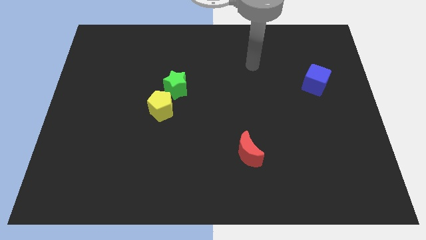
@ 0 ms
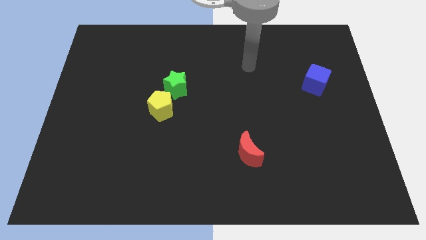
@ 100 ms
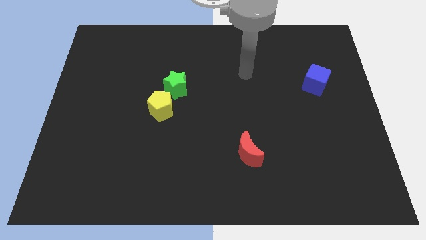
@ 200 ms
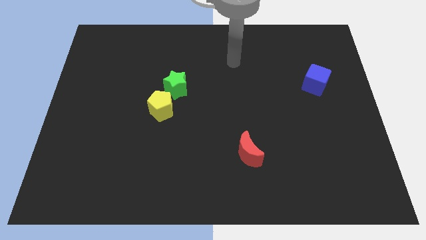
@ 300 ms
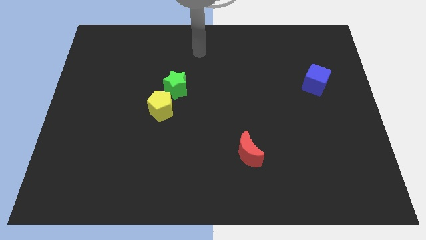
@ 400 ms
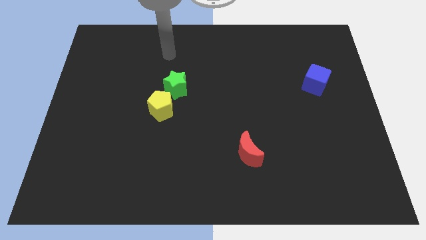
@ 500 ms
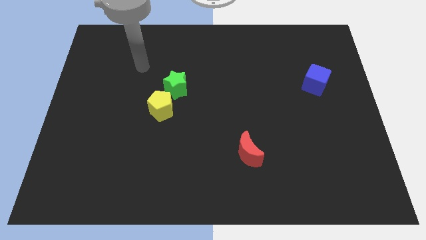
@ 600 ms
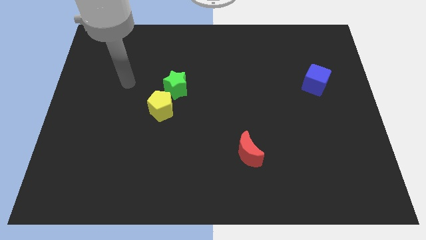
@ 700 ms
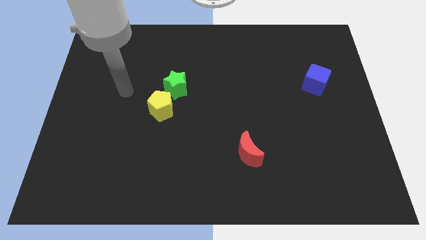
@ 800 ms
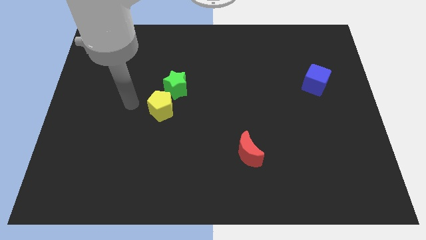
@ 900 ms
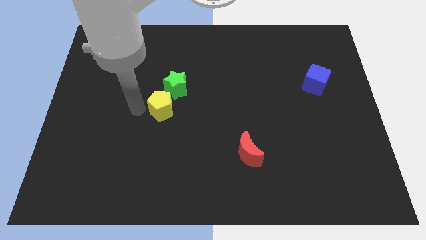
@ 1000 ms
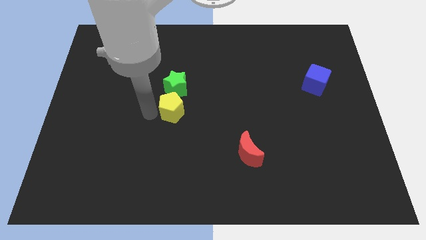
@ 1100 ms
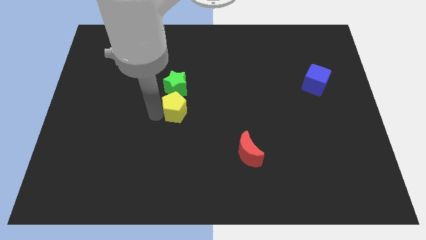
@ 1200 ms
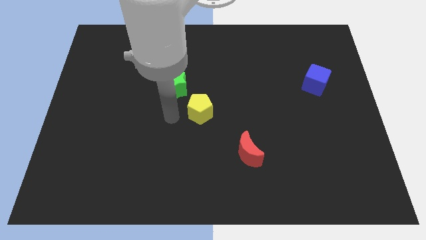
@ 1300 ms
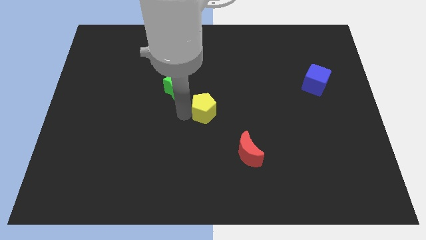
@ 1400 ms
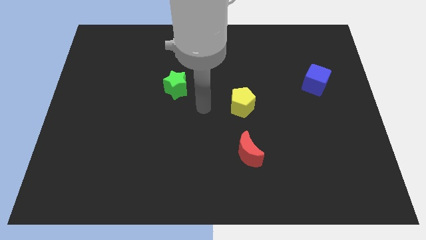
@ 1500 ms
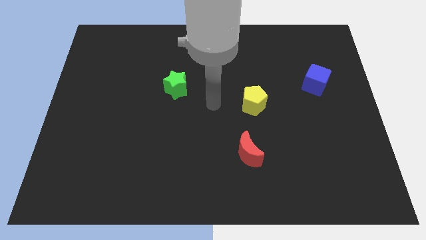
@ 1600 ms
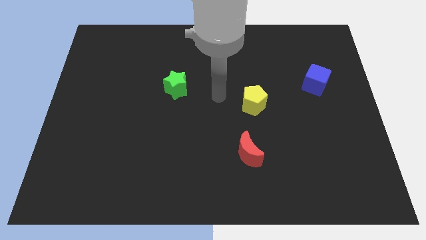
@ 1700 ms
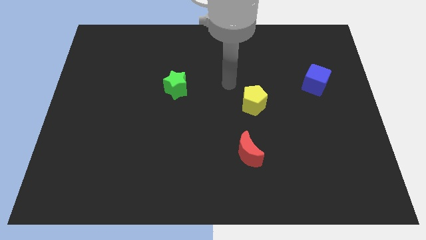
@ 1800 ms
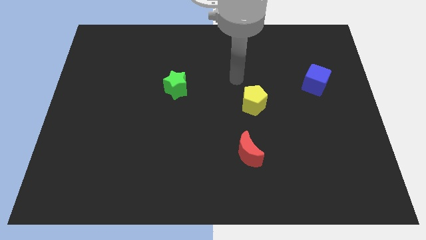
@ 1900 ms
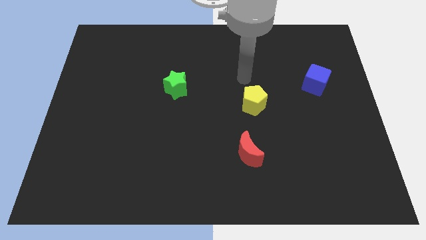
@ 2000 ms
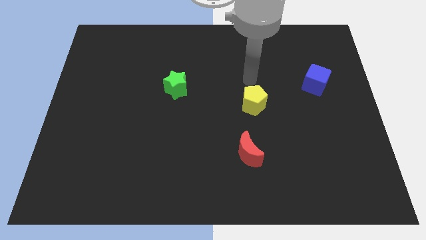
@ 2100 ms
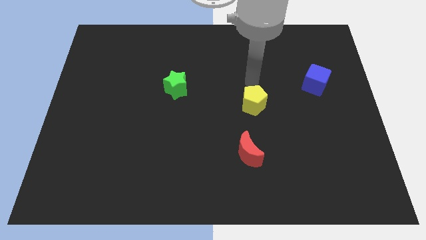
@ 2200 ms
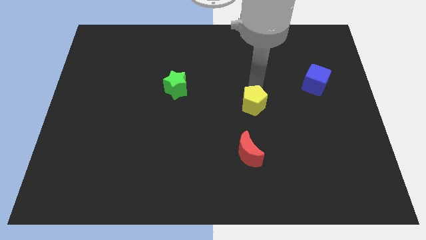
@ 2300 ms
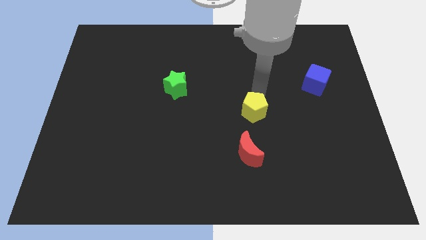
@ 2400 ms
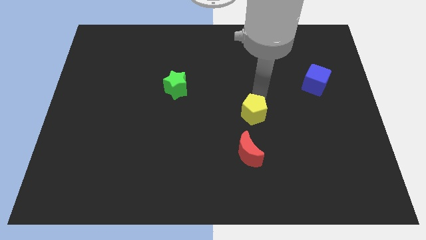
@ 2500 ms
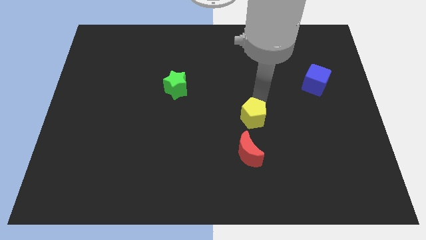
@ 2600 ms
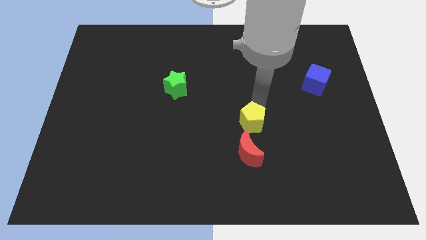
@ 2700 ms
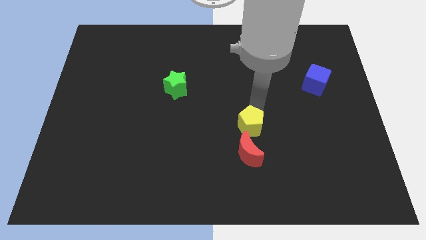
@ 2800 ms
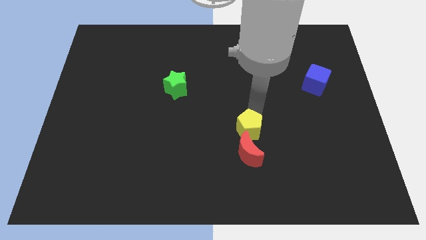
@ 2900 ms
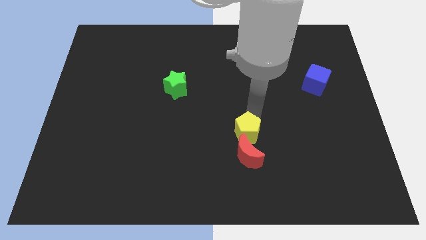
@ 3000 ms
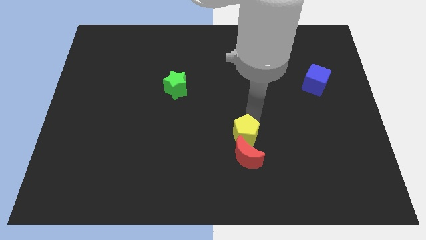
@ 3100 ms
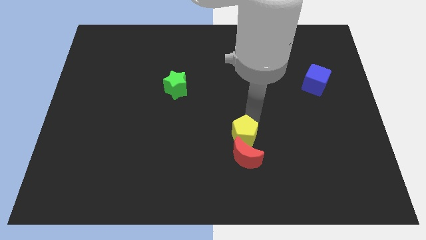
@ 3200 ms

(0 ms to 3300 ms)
put the pentagon close to the red moon

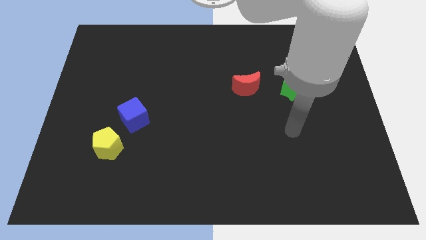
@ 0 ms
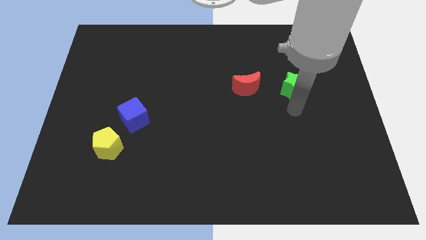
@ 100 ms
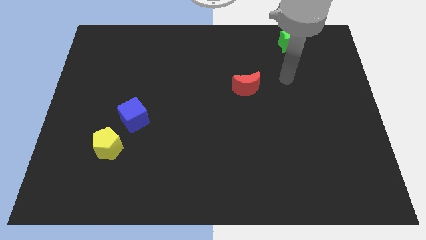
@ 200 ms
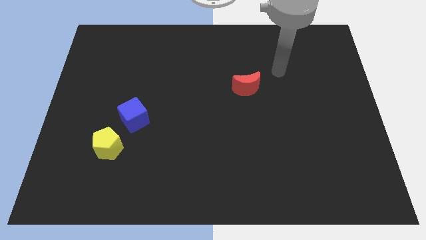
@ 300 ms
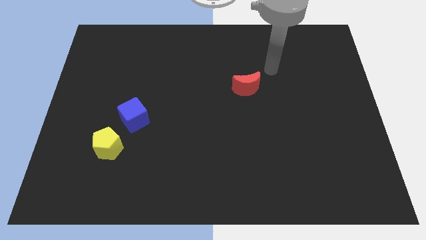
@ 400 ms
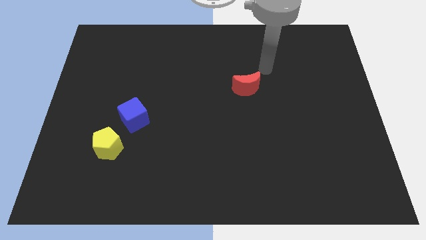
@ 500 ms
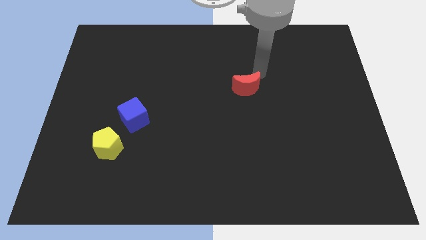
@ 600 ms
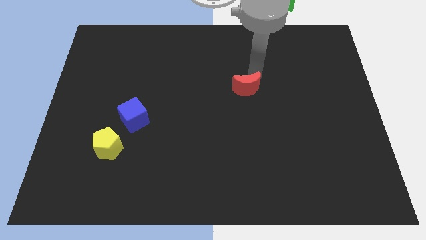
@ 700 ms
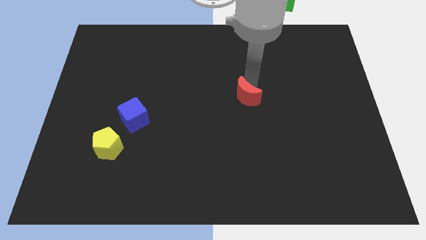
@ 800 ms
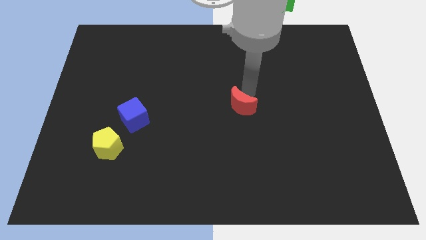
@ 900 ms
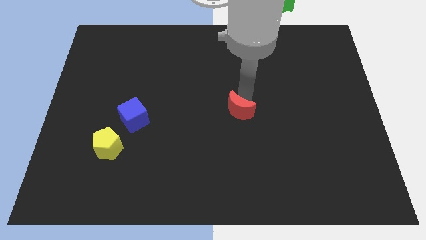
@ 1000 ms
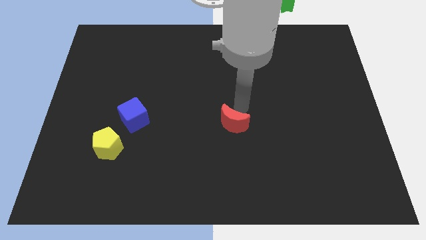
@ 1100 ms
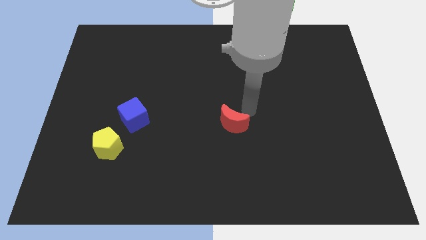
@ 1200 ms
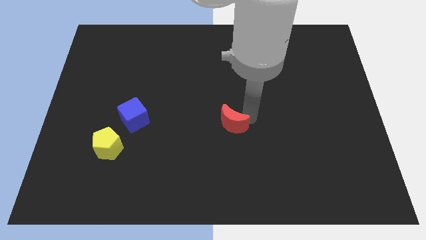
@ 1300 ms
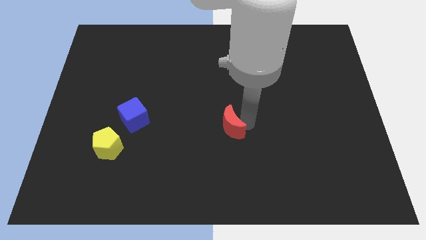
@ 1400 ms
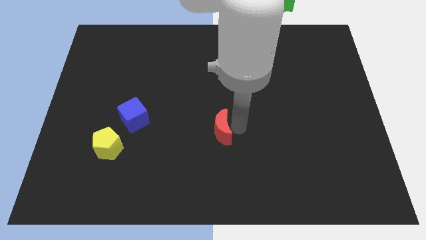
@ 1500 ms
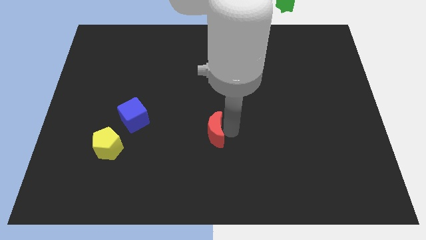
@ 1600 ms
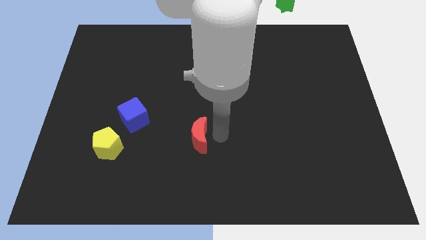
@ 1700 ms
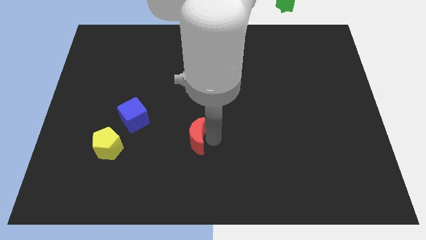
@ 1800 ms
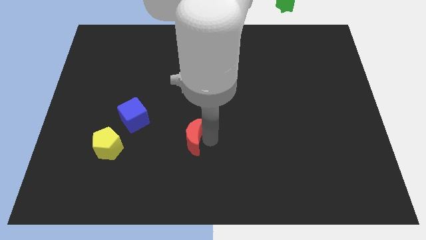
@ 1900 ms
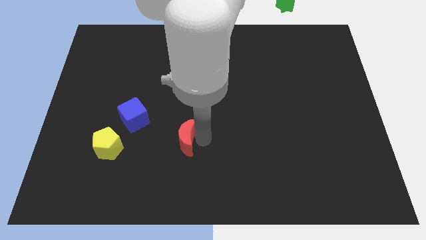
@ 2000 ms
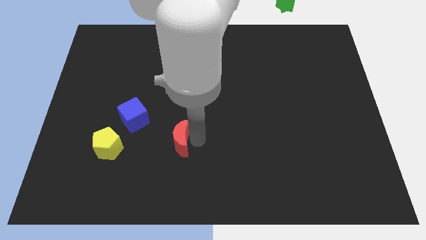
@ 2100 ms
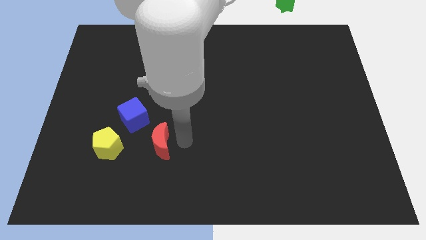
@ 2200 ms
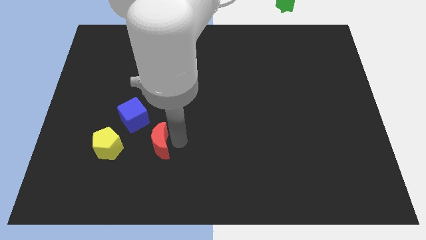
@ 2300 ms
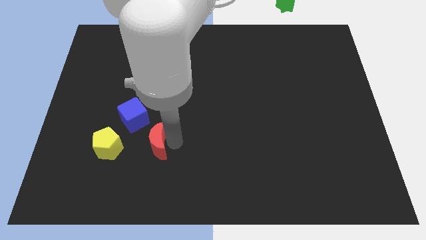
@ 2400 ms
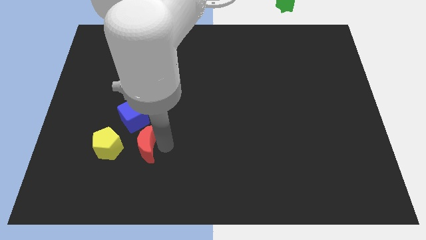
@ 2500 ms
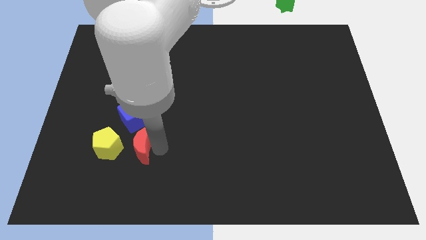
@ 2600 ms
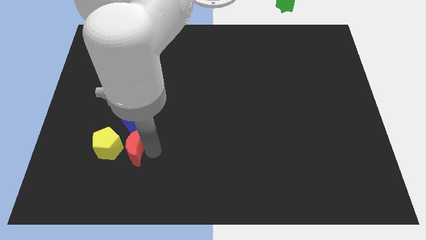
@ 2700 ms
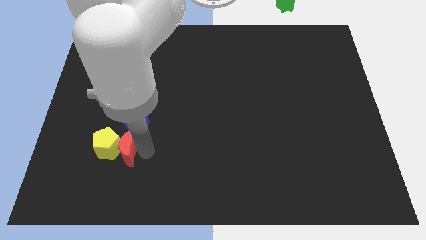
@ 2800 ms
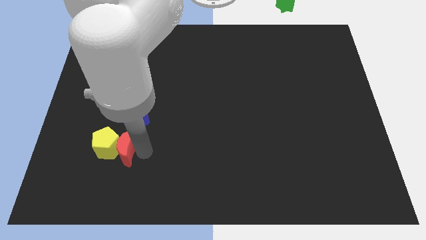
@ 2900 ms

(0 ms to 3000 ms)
move the red moon to the pentagon

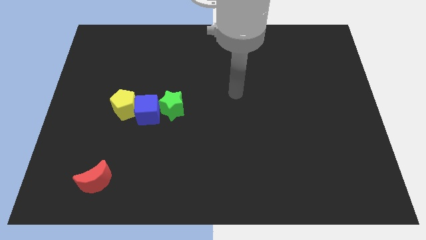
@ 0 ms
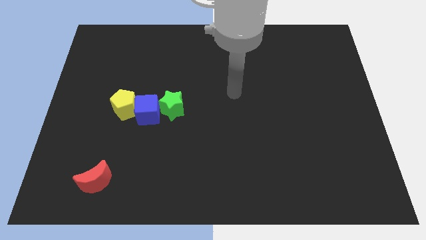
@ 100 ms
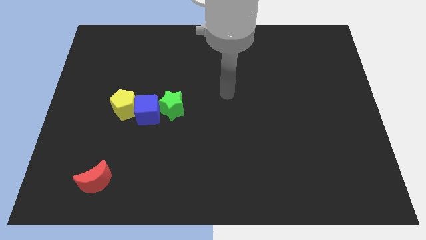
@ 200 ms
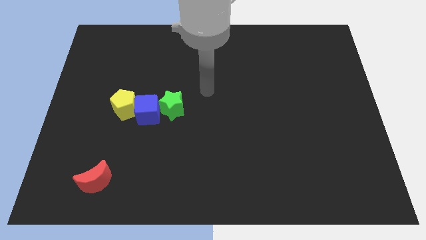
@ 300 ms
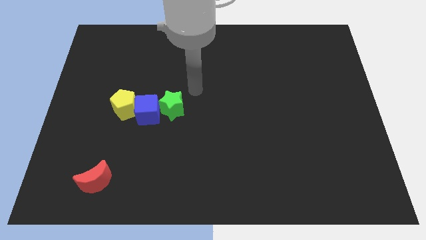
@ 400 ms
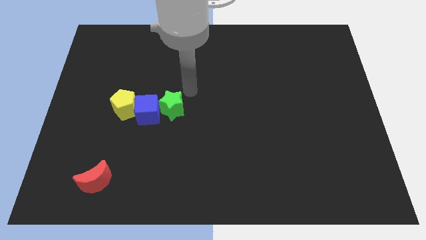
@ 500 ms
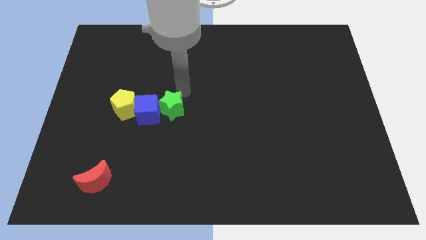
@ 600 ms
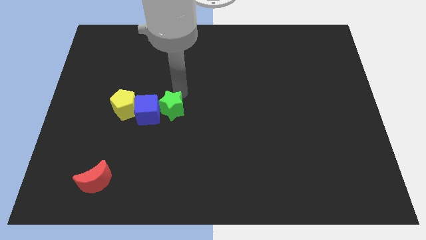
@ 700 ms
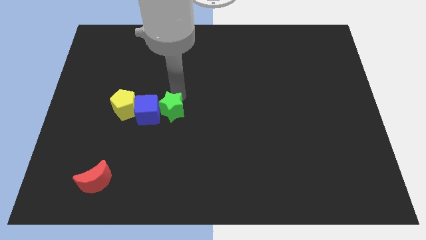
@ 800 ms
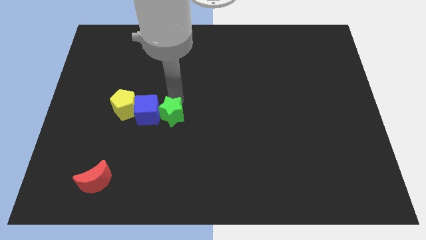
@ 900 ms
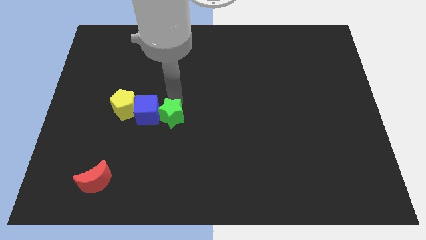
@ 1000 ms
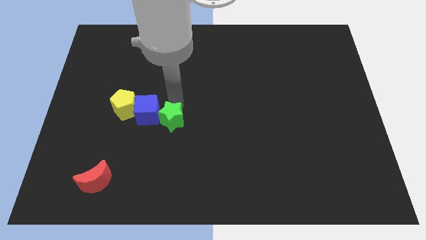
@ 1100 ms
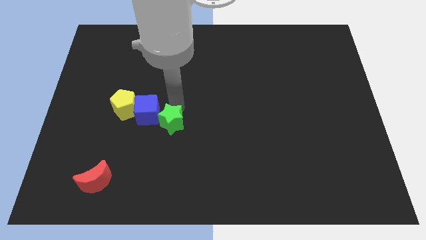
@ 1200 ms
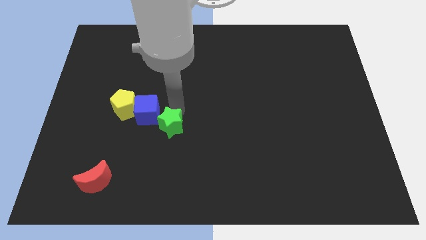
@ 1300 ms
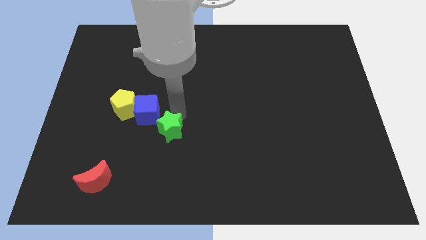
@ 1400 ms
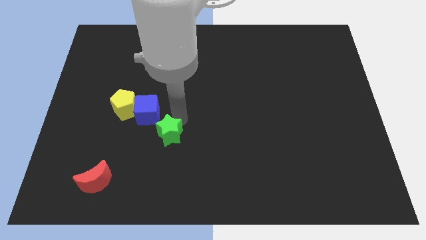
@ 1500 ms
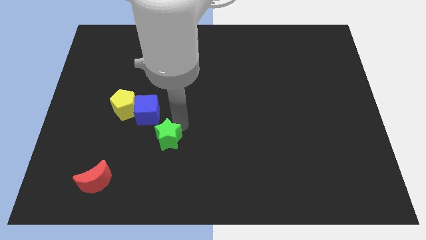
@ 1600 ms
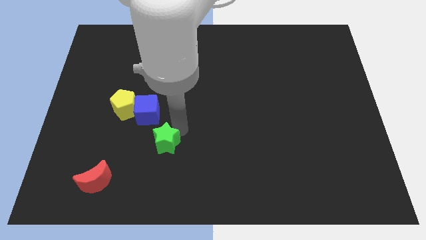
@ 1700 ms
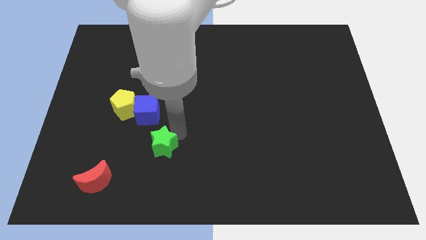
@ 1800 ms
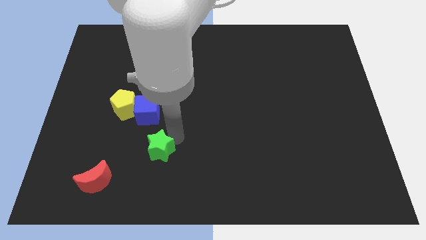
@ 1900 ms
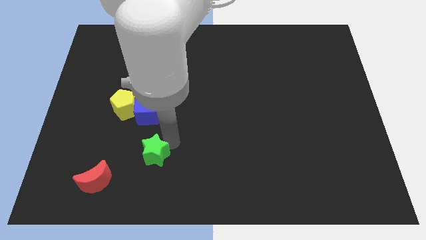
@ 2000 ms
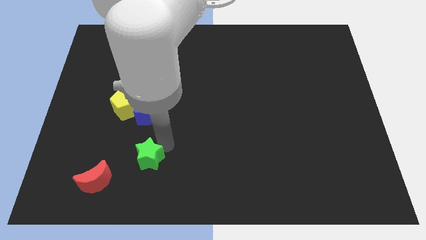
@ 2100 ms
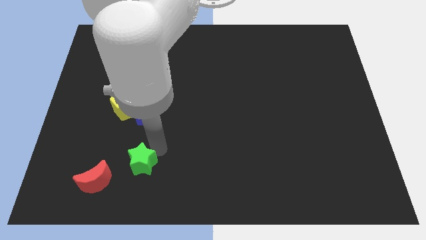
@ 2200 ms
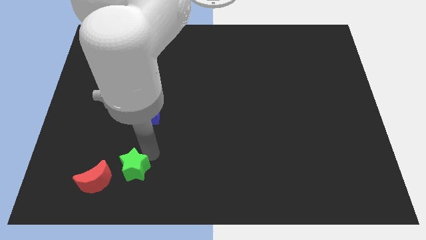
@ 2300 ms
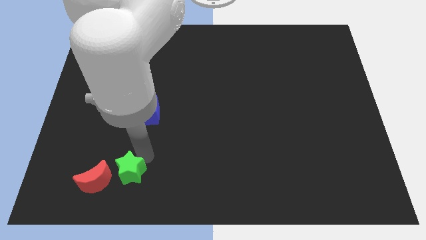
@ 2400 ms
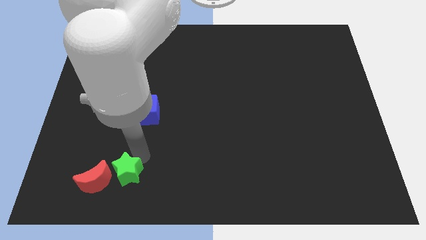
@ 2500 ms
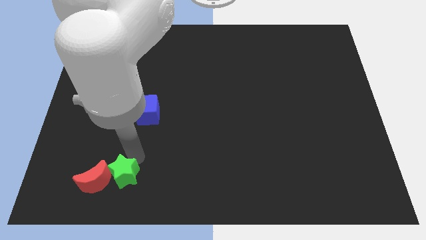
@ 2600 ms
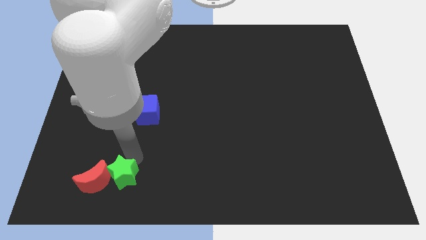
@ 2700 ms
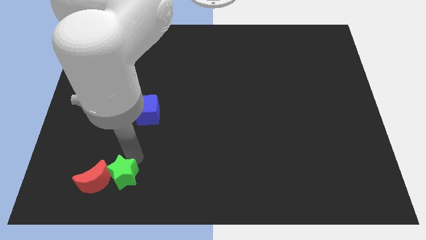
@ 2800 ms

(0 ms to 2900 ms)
slide the green block close to the red moon
